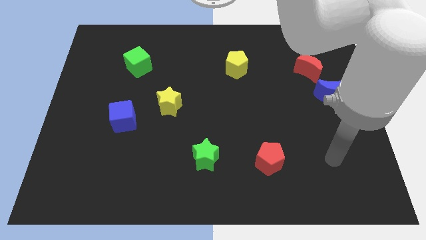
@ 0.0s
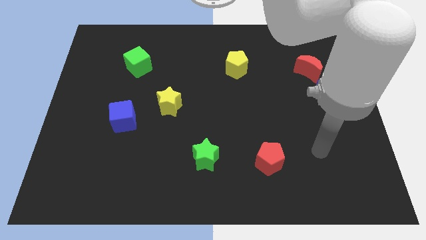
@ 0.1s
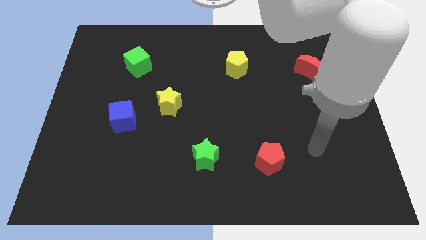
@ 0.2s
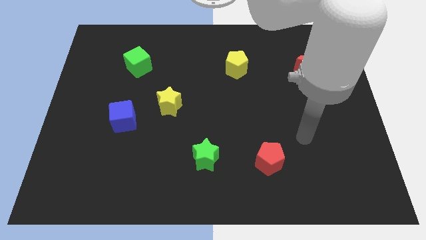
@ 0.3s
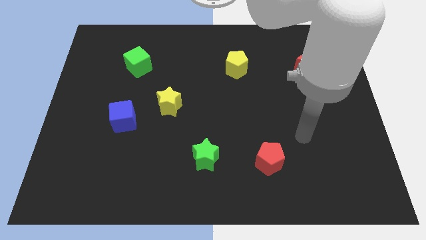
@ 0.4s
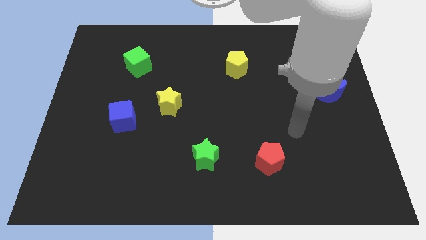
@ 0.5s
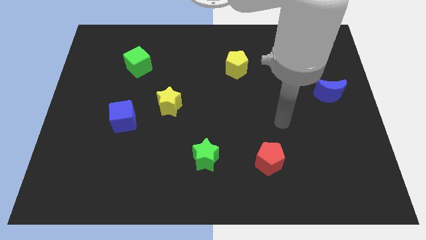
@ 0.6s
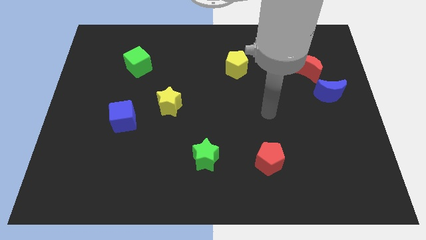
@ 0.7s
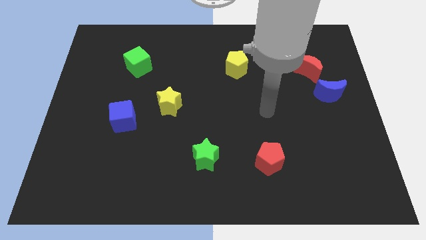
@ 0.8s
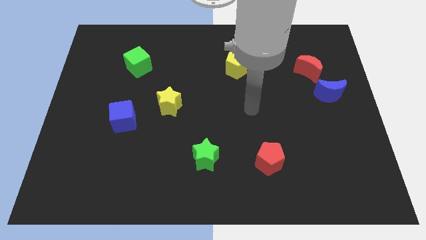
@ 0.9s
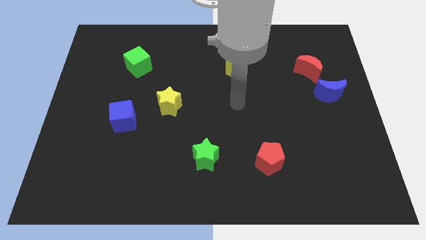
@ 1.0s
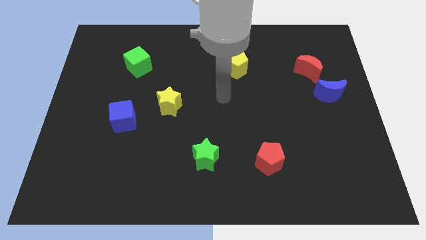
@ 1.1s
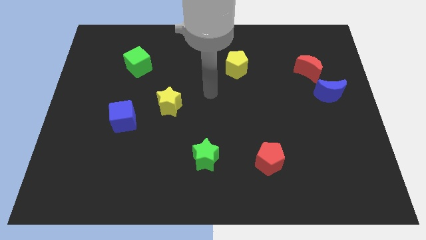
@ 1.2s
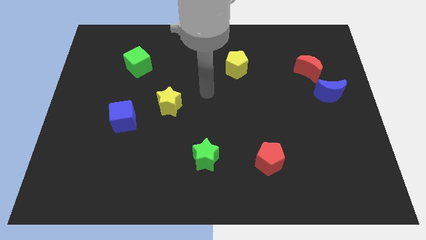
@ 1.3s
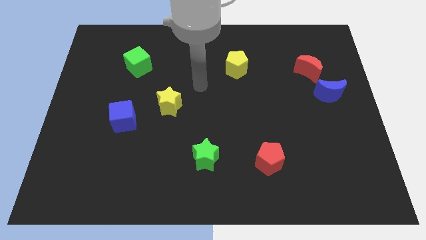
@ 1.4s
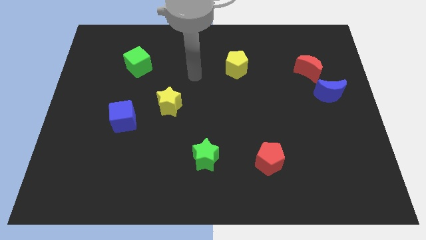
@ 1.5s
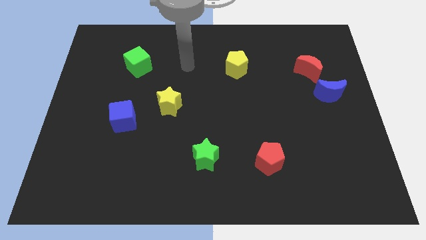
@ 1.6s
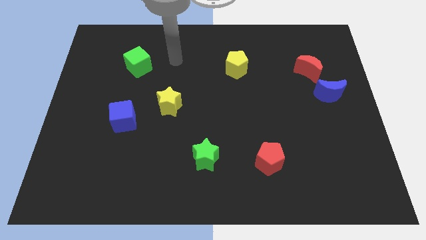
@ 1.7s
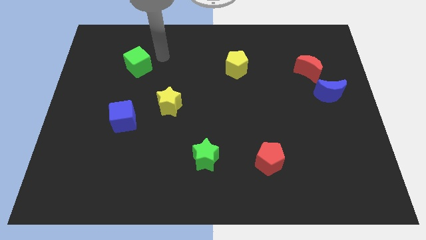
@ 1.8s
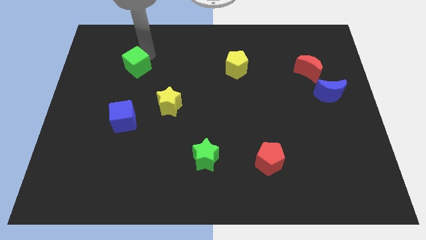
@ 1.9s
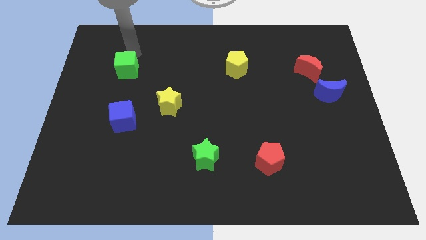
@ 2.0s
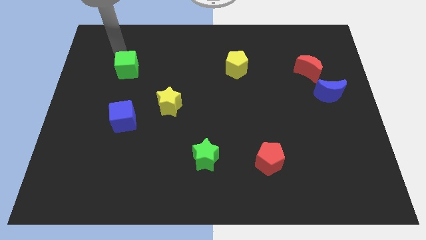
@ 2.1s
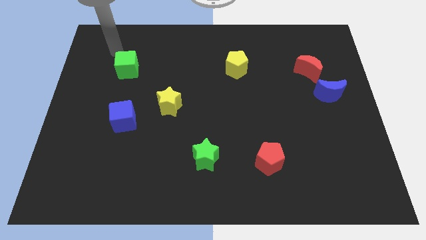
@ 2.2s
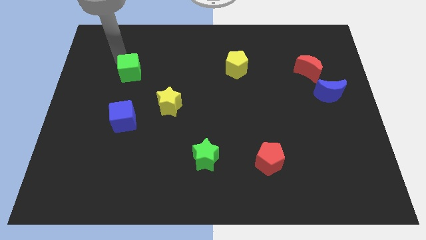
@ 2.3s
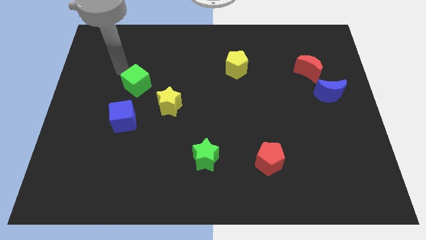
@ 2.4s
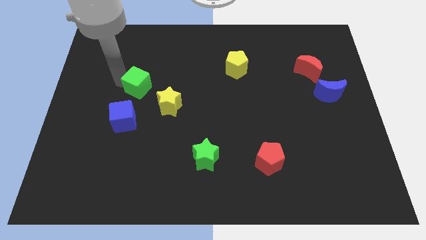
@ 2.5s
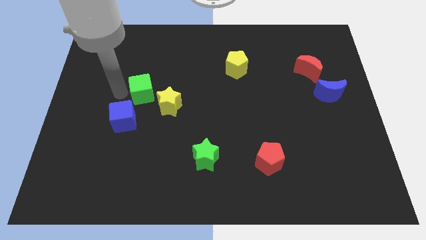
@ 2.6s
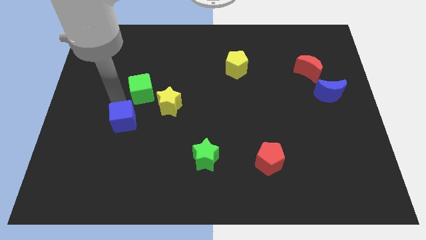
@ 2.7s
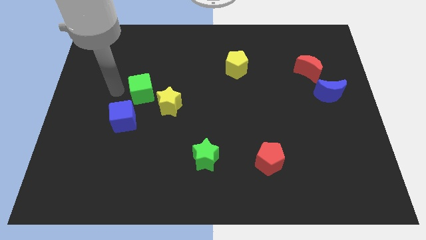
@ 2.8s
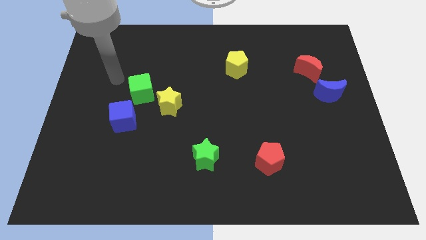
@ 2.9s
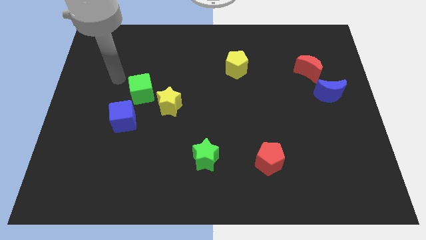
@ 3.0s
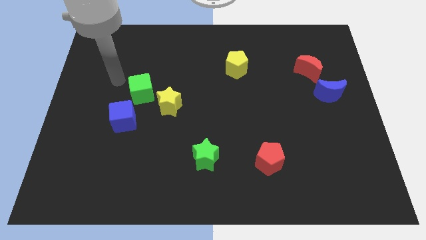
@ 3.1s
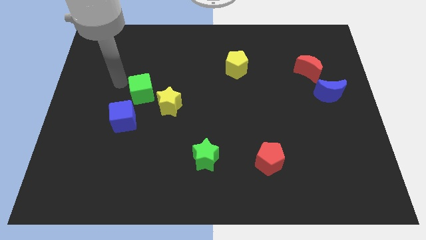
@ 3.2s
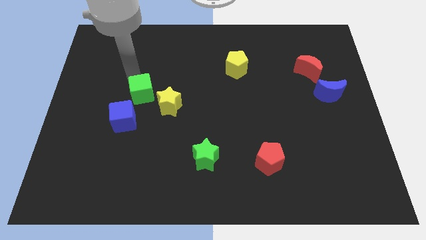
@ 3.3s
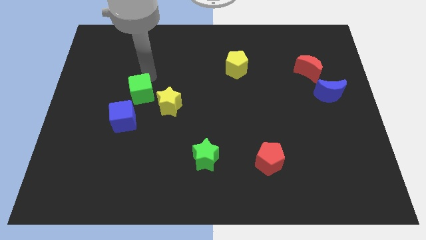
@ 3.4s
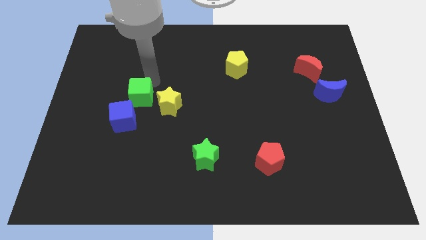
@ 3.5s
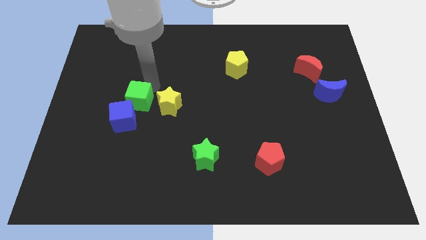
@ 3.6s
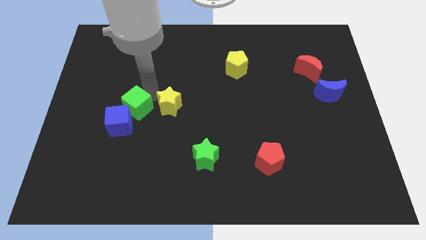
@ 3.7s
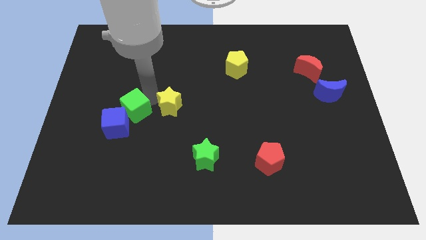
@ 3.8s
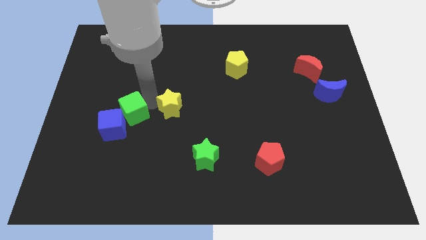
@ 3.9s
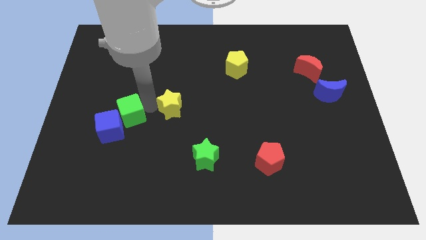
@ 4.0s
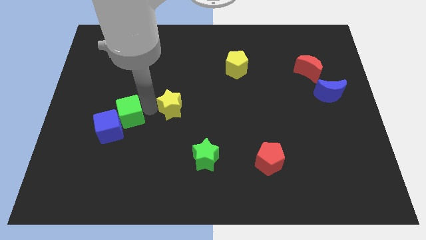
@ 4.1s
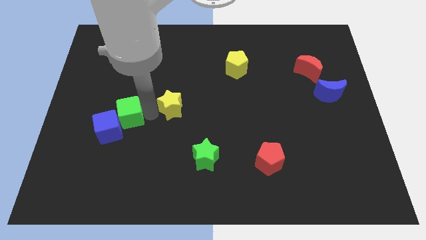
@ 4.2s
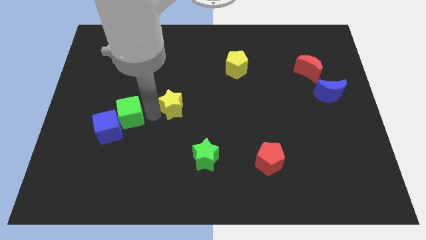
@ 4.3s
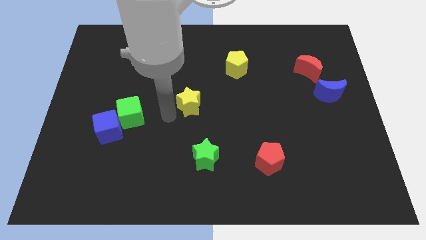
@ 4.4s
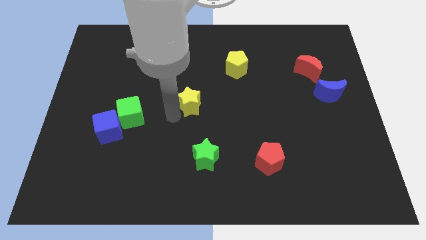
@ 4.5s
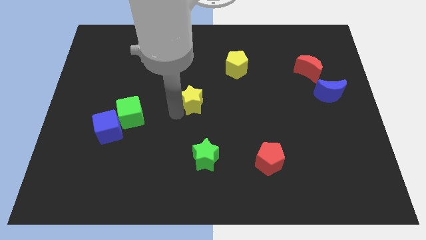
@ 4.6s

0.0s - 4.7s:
push the green cube to the right side of the blue cube

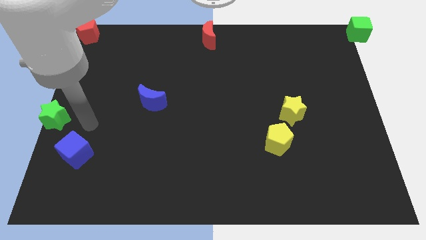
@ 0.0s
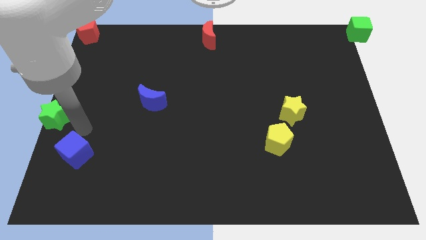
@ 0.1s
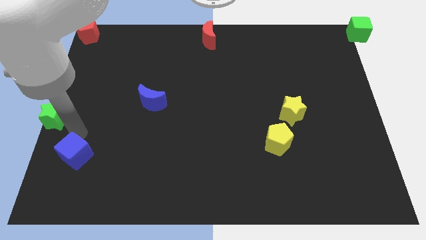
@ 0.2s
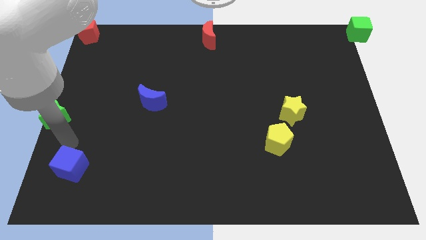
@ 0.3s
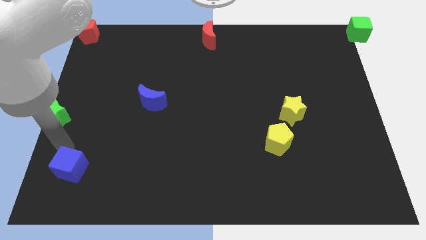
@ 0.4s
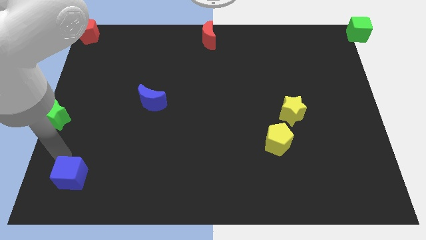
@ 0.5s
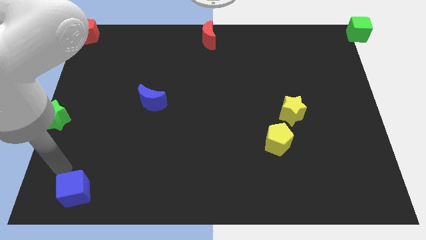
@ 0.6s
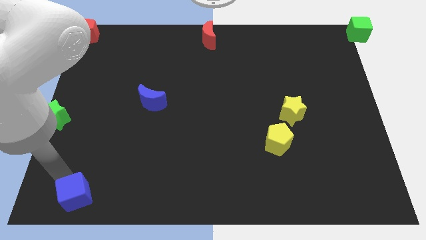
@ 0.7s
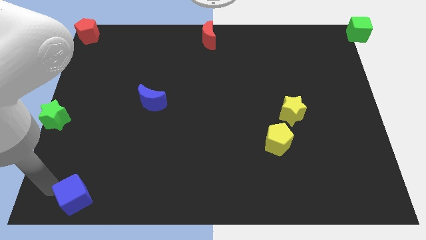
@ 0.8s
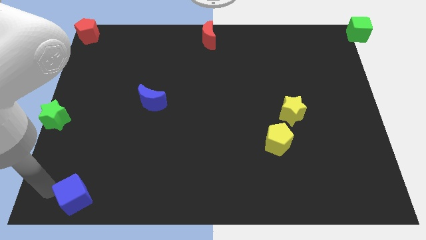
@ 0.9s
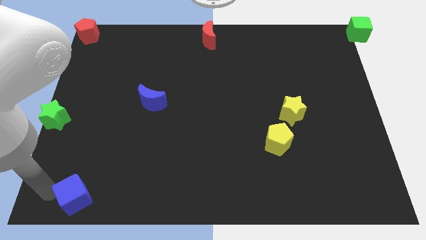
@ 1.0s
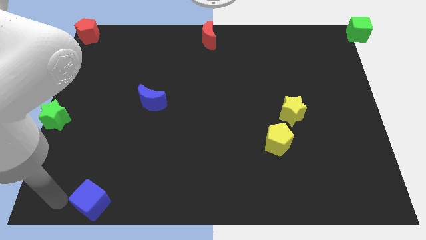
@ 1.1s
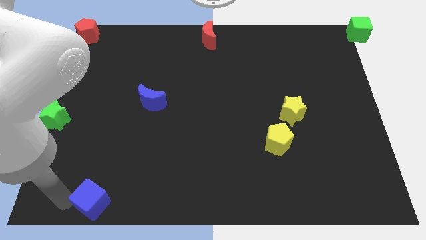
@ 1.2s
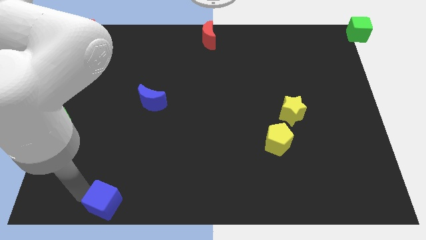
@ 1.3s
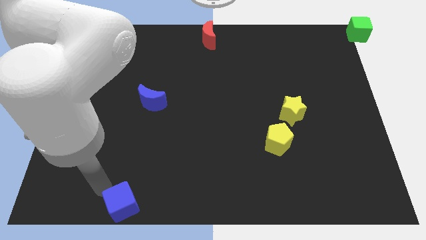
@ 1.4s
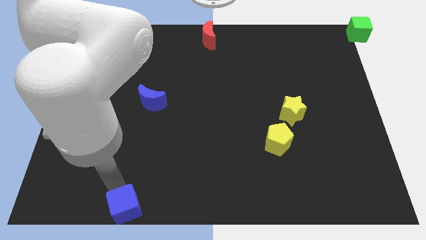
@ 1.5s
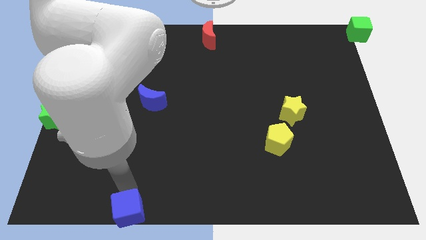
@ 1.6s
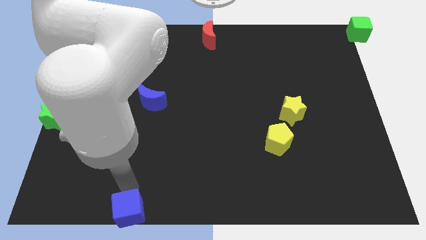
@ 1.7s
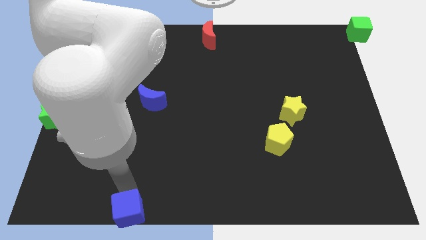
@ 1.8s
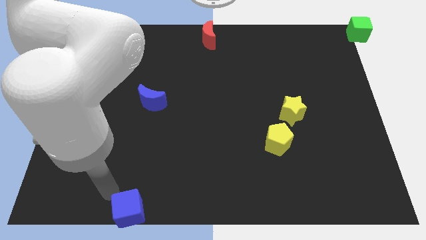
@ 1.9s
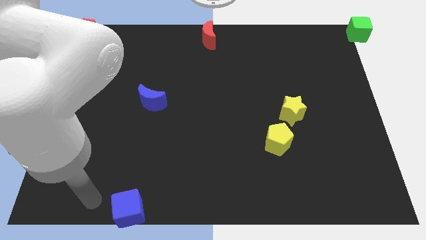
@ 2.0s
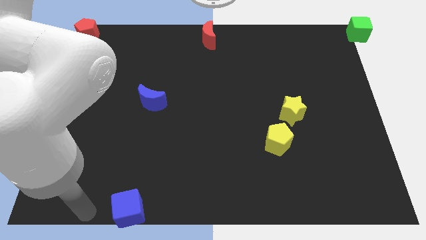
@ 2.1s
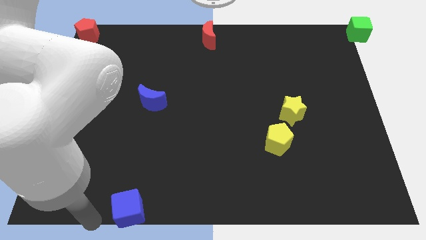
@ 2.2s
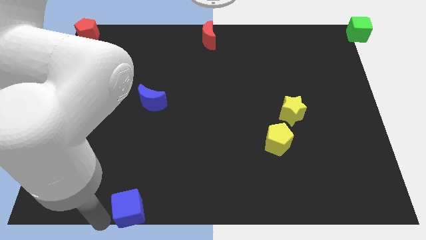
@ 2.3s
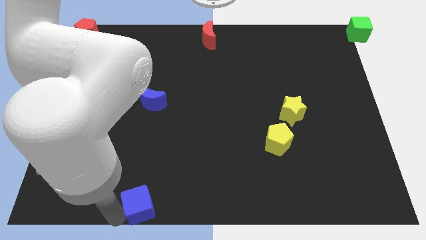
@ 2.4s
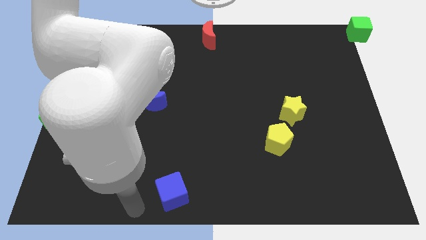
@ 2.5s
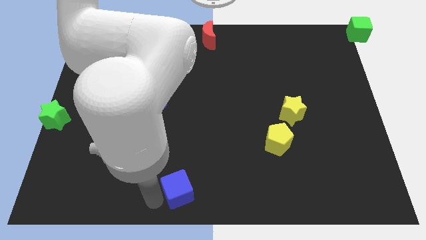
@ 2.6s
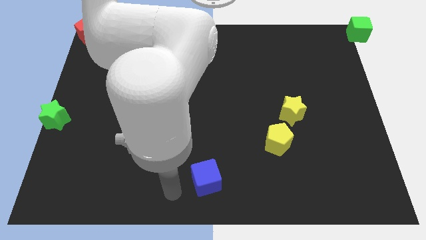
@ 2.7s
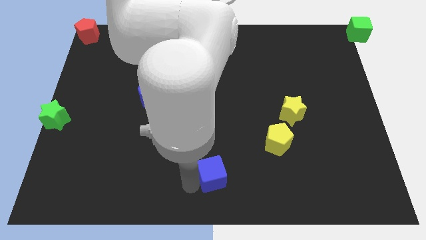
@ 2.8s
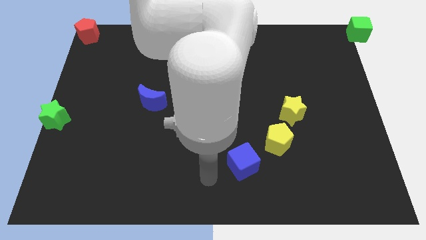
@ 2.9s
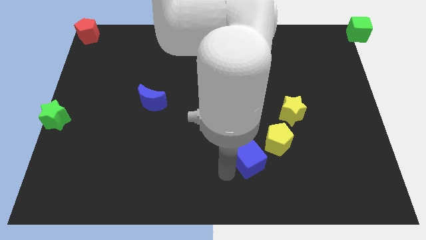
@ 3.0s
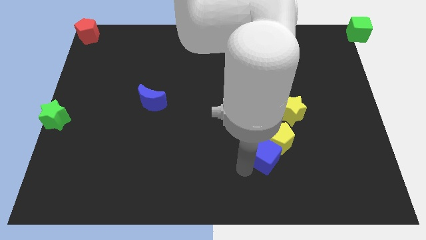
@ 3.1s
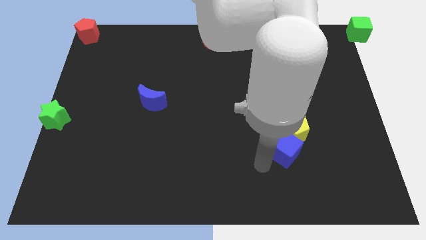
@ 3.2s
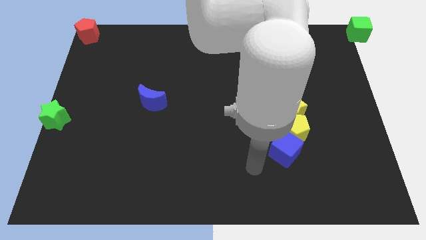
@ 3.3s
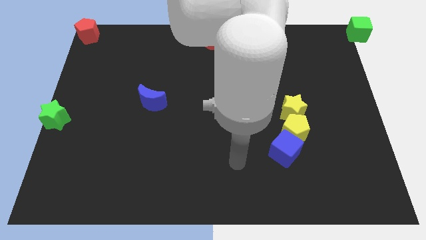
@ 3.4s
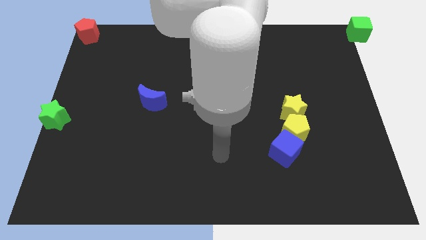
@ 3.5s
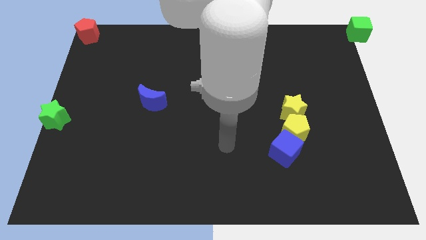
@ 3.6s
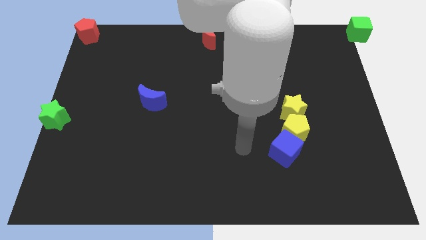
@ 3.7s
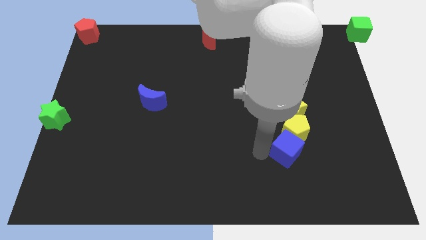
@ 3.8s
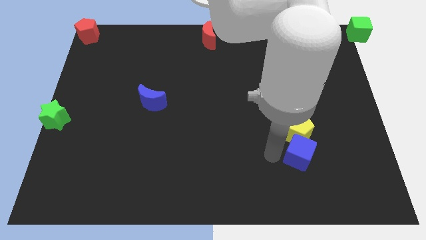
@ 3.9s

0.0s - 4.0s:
push the blue cube to the bottom of the yellow pentagon

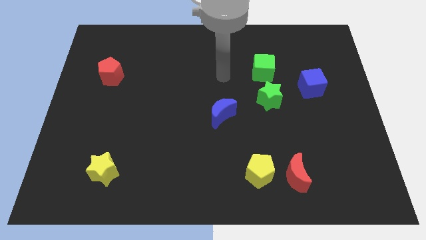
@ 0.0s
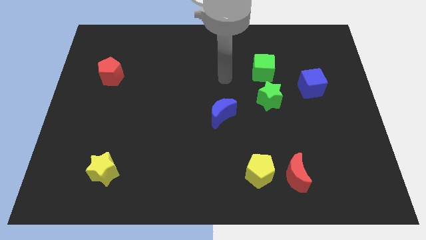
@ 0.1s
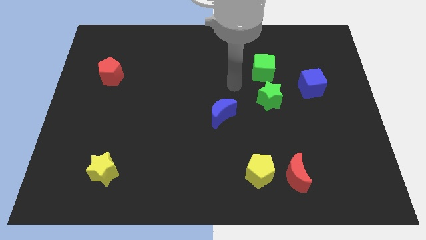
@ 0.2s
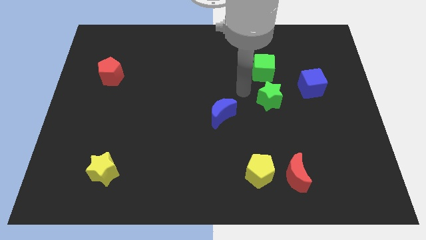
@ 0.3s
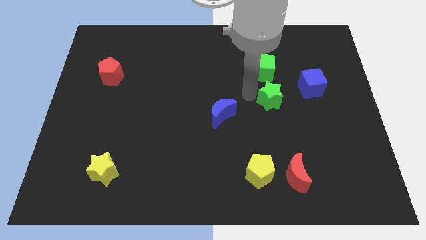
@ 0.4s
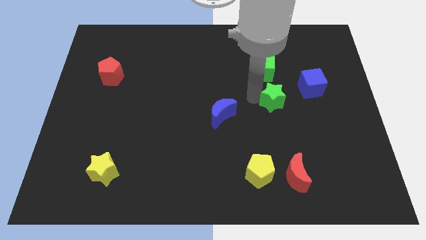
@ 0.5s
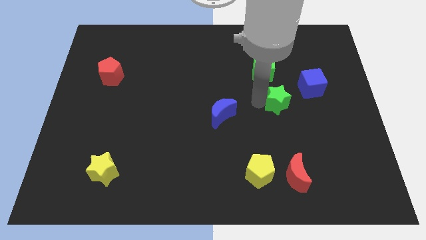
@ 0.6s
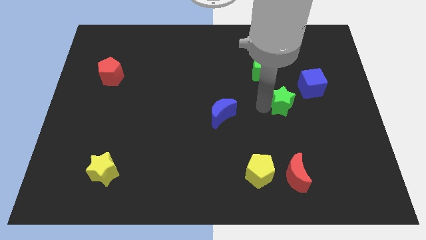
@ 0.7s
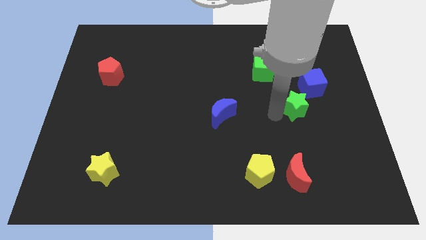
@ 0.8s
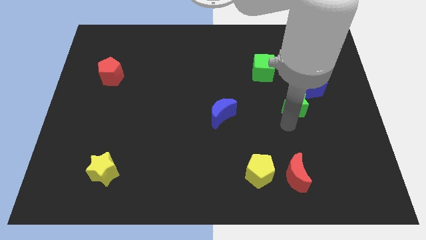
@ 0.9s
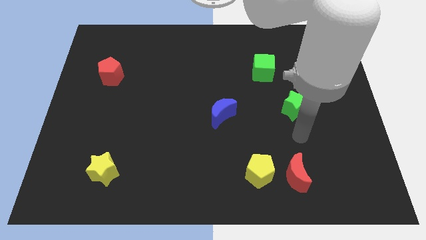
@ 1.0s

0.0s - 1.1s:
slide green star to the right of blue moon
